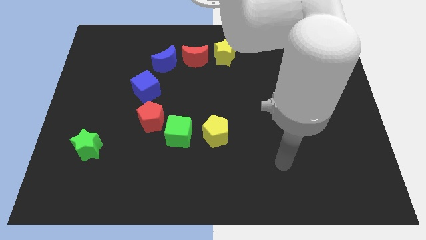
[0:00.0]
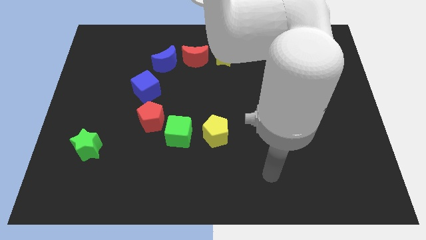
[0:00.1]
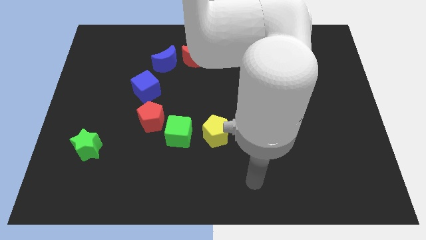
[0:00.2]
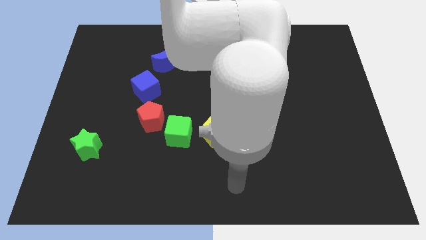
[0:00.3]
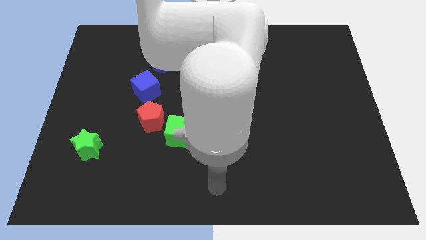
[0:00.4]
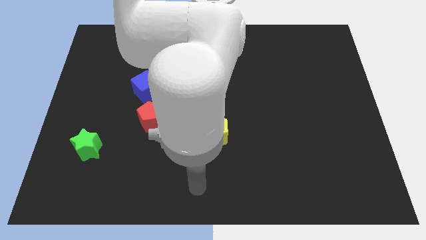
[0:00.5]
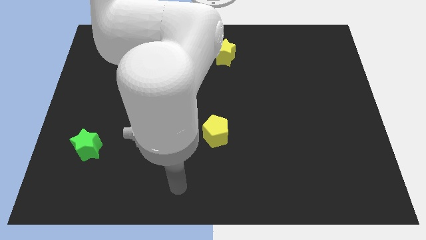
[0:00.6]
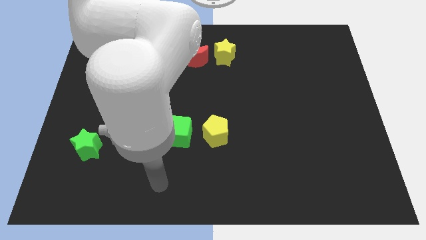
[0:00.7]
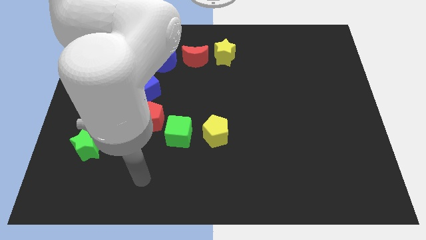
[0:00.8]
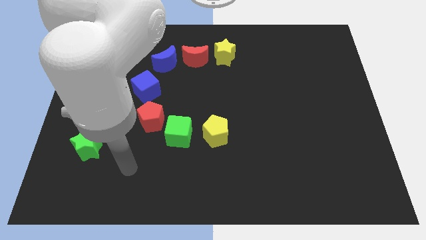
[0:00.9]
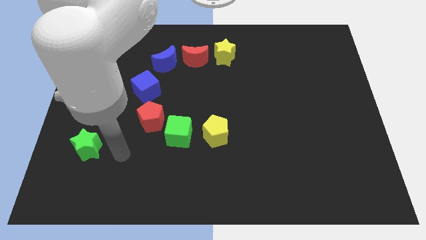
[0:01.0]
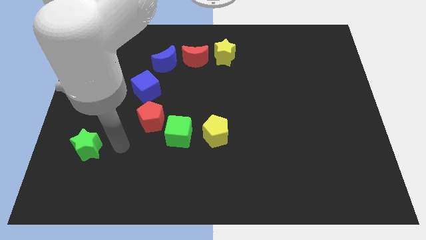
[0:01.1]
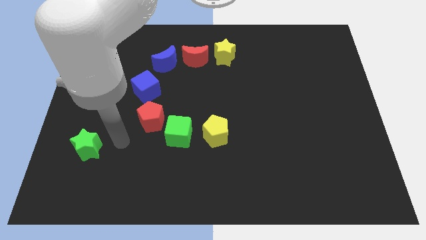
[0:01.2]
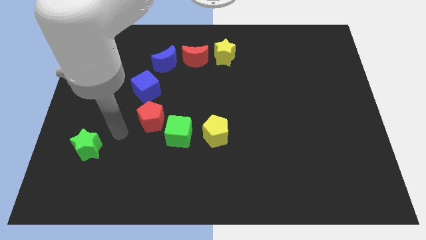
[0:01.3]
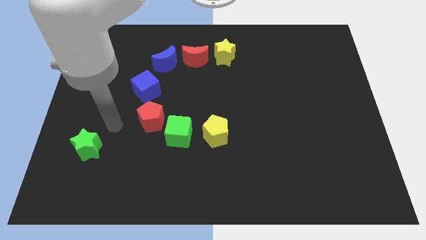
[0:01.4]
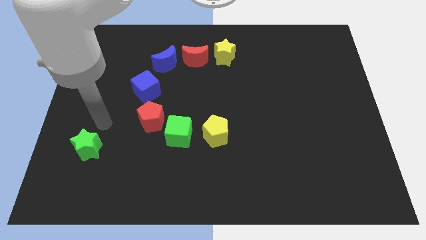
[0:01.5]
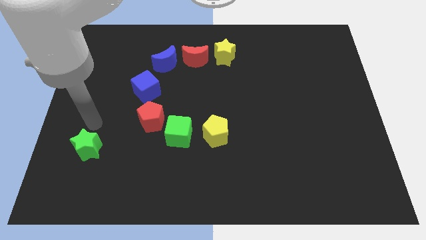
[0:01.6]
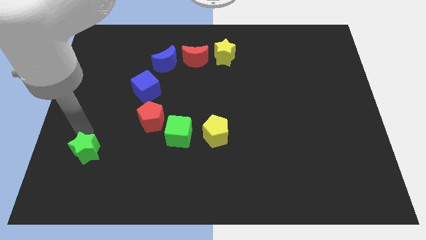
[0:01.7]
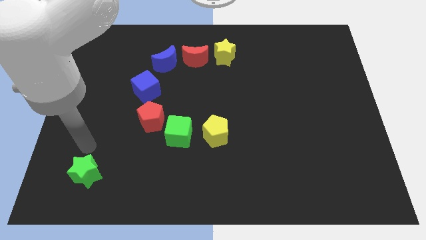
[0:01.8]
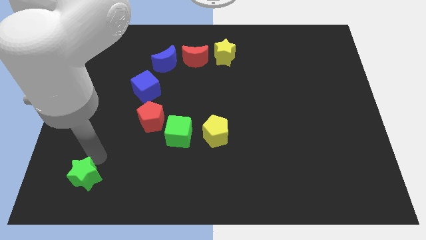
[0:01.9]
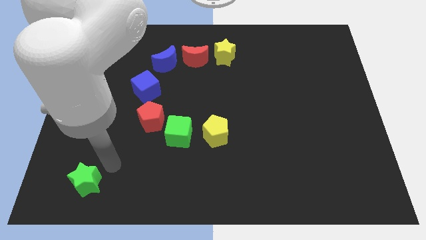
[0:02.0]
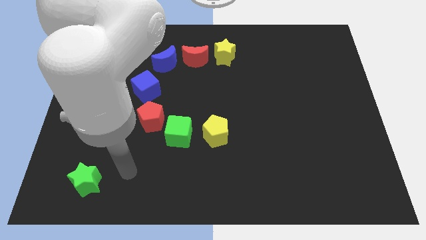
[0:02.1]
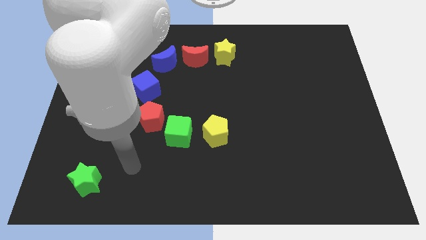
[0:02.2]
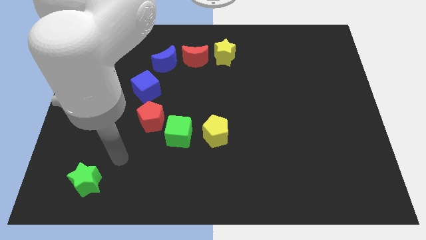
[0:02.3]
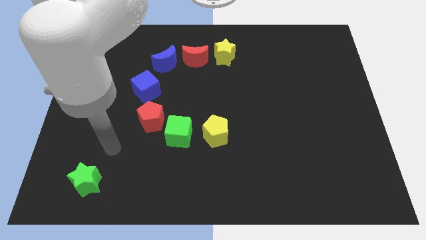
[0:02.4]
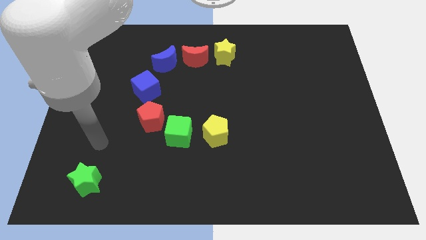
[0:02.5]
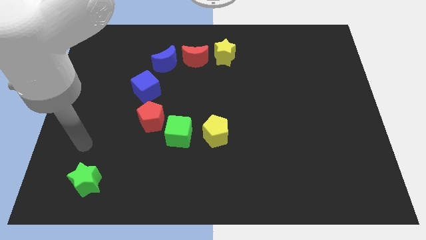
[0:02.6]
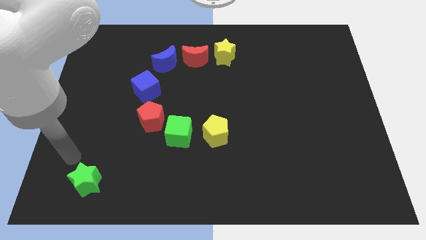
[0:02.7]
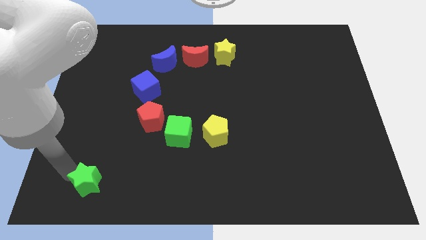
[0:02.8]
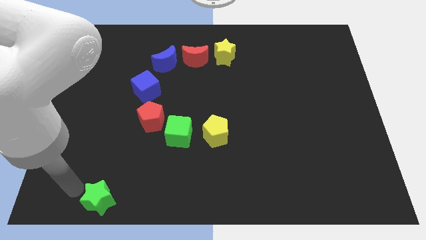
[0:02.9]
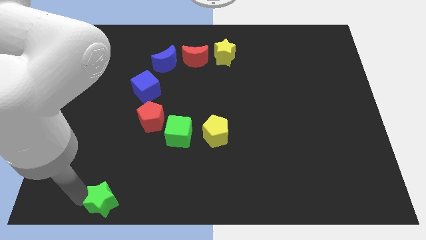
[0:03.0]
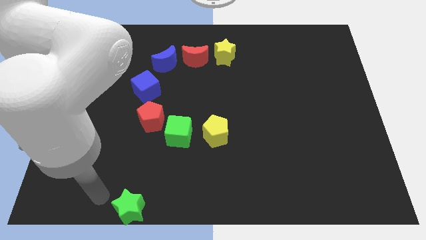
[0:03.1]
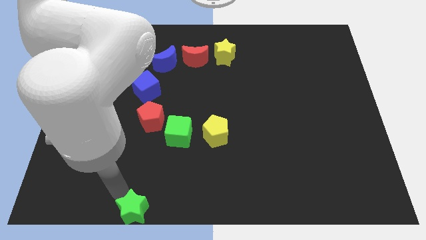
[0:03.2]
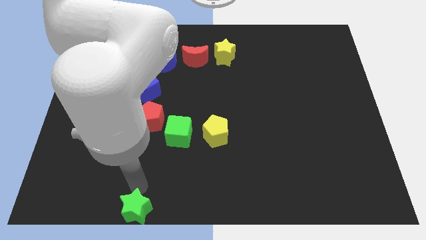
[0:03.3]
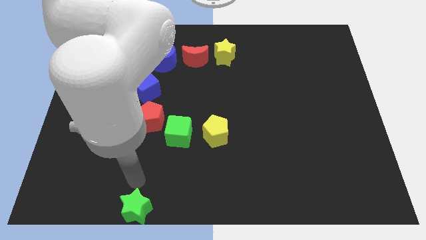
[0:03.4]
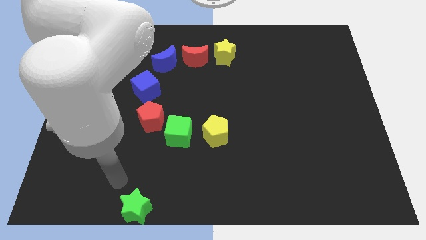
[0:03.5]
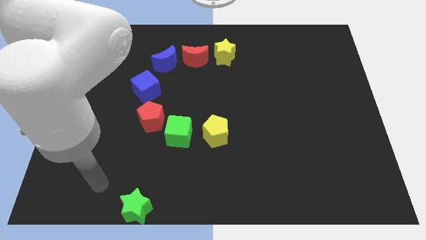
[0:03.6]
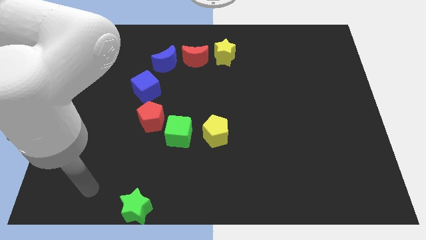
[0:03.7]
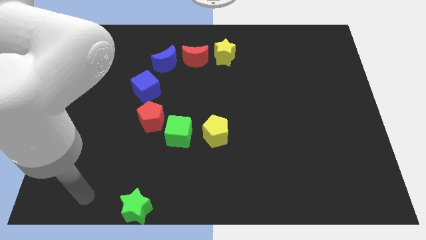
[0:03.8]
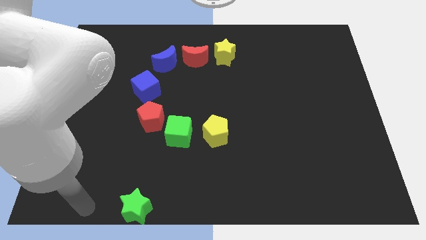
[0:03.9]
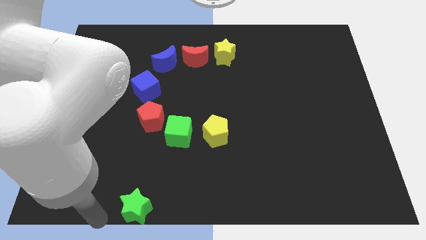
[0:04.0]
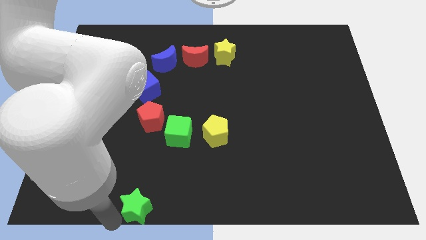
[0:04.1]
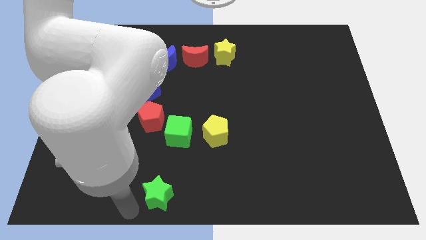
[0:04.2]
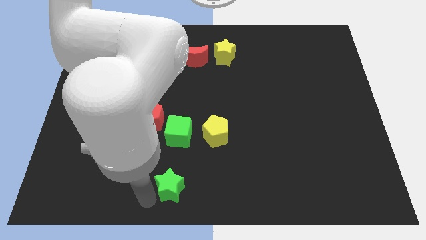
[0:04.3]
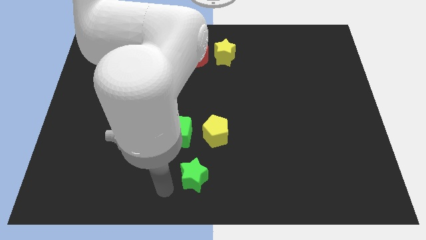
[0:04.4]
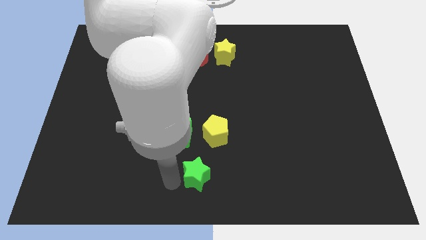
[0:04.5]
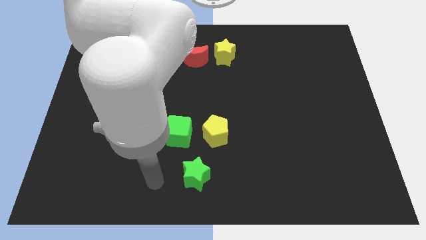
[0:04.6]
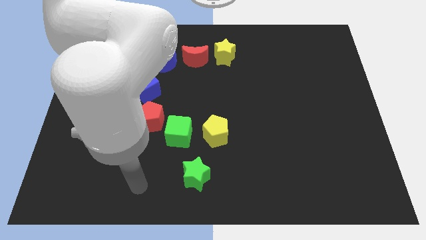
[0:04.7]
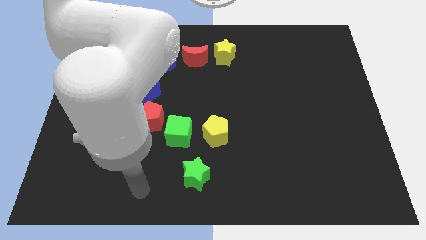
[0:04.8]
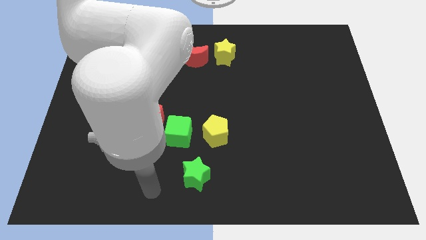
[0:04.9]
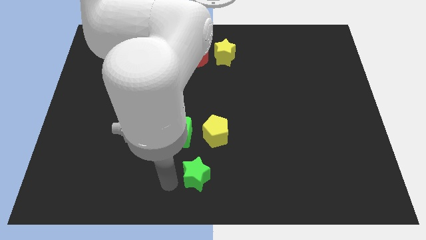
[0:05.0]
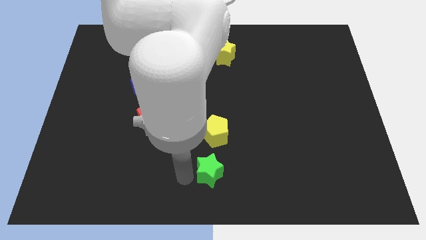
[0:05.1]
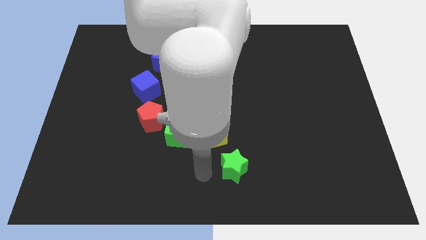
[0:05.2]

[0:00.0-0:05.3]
move the green star vertically below the yellow pentagon

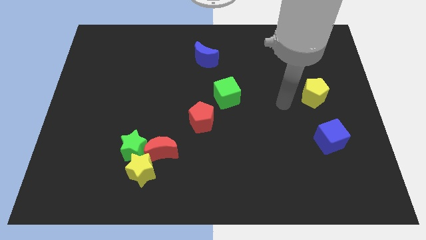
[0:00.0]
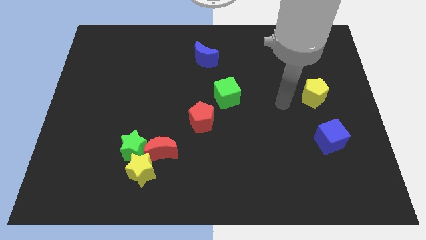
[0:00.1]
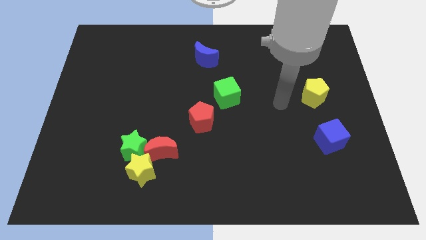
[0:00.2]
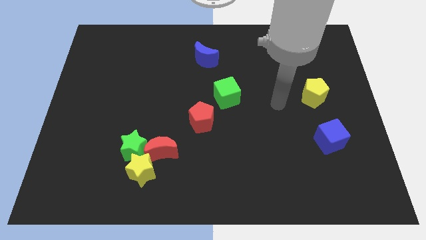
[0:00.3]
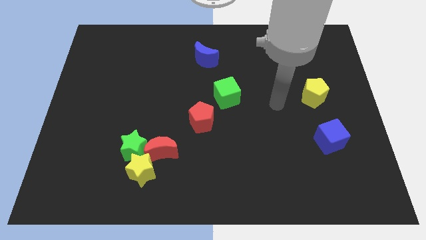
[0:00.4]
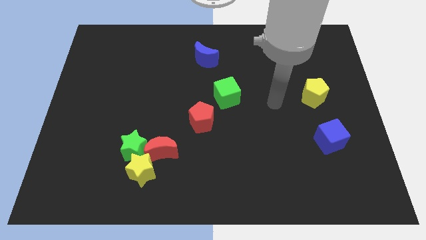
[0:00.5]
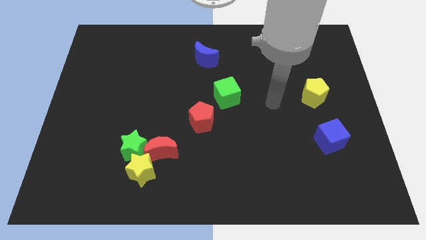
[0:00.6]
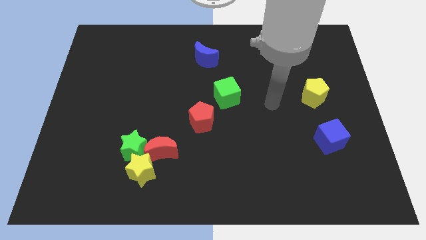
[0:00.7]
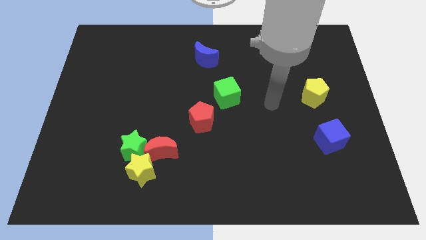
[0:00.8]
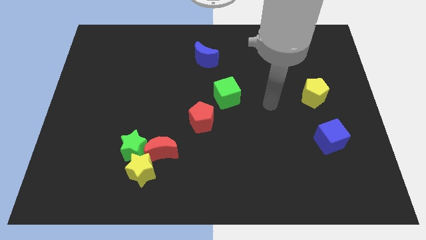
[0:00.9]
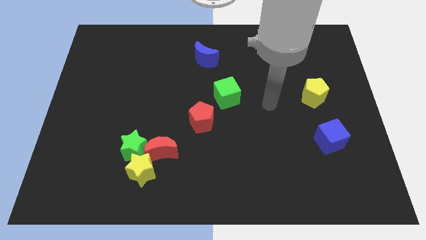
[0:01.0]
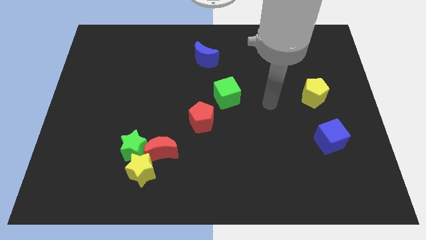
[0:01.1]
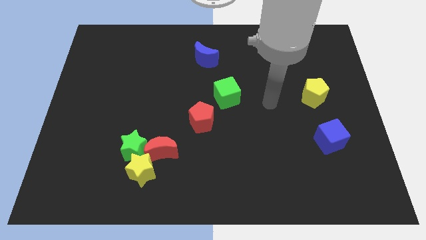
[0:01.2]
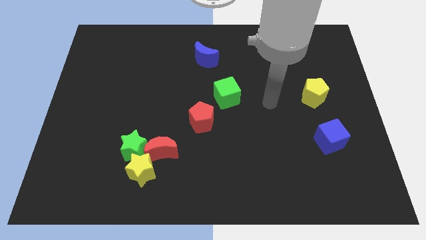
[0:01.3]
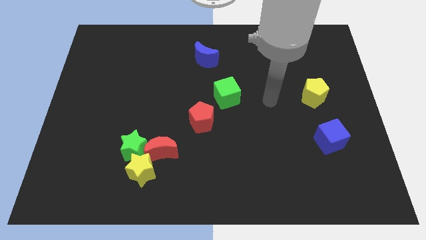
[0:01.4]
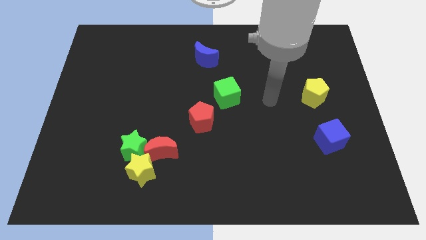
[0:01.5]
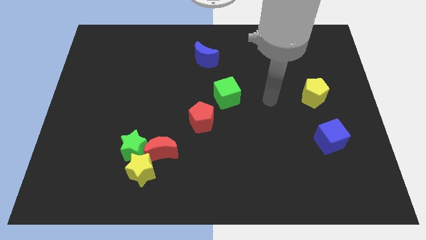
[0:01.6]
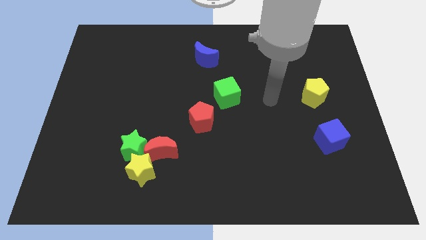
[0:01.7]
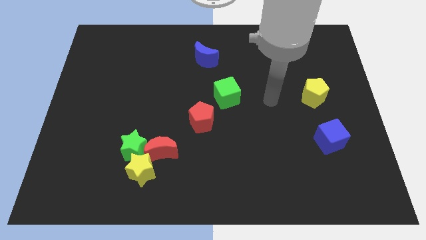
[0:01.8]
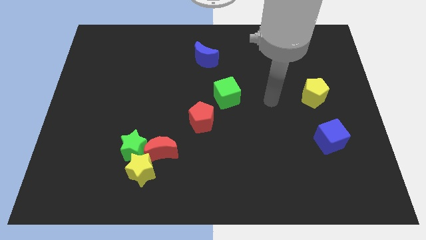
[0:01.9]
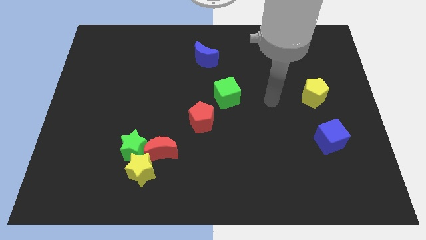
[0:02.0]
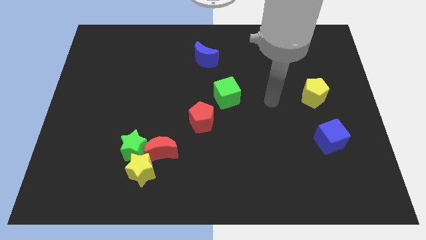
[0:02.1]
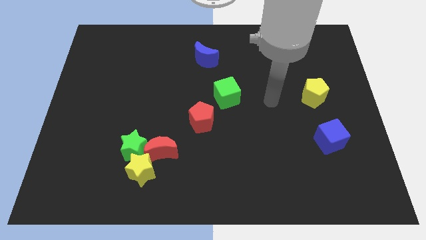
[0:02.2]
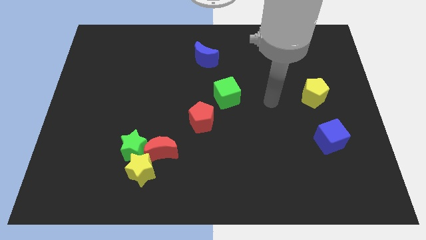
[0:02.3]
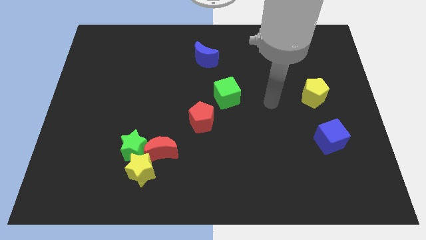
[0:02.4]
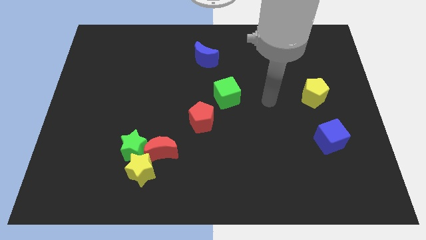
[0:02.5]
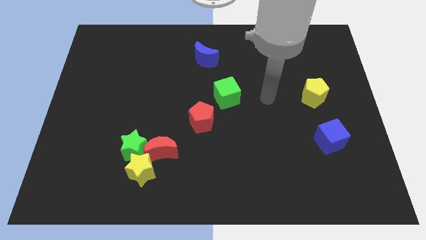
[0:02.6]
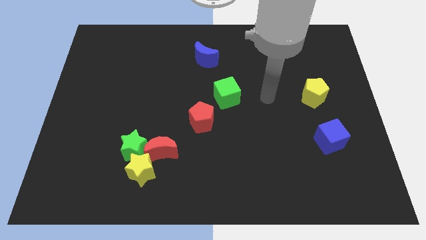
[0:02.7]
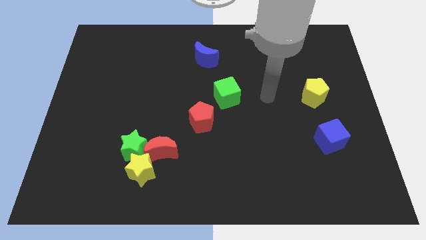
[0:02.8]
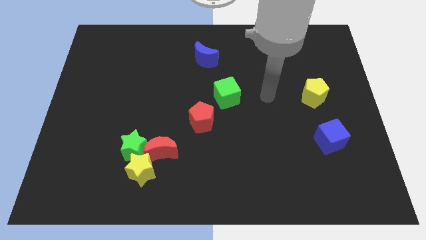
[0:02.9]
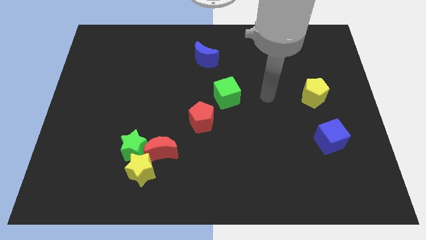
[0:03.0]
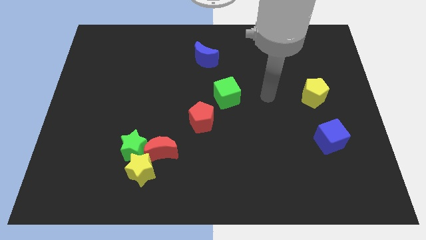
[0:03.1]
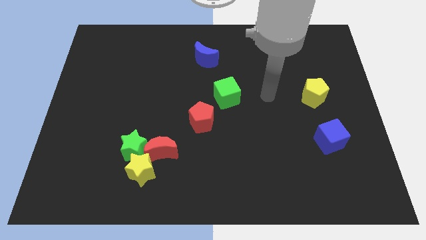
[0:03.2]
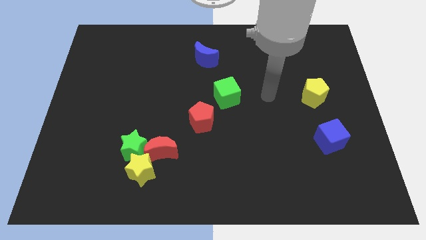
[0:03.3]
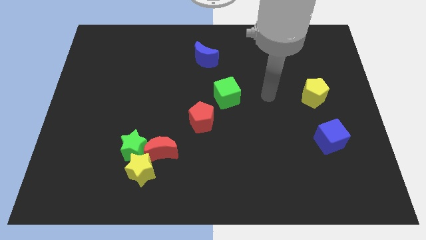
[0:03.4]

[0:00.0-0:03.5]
move your arm parallel right to the green cube
